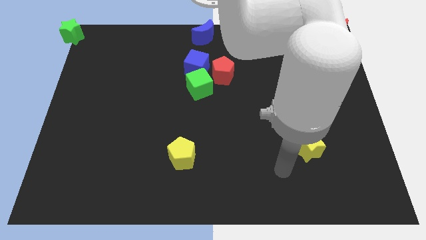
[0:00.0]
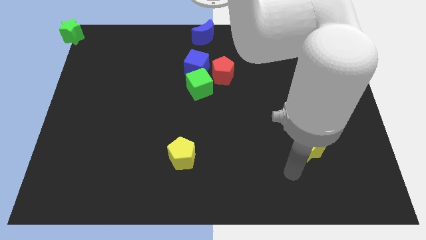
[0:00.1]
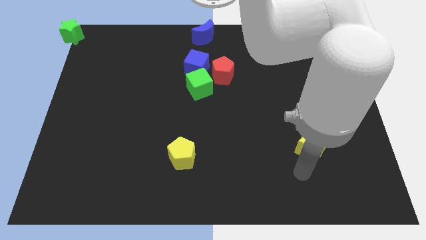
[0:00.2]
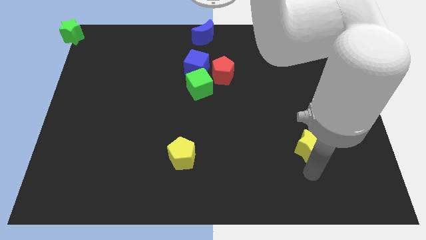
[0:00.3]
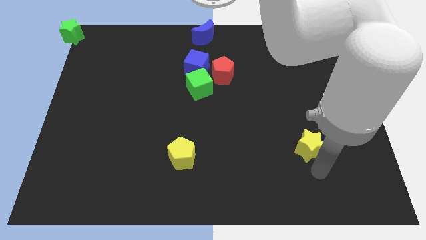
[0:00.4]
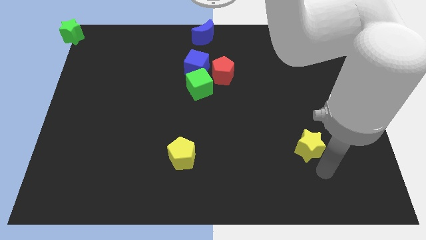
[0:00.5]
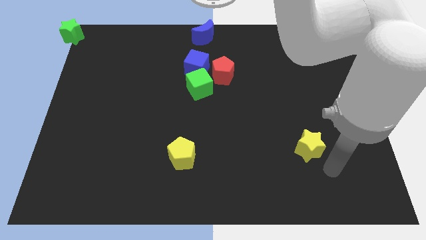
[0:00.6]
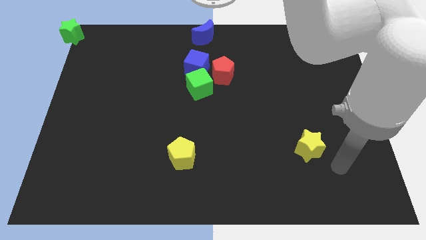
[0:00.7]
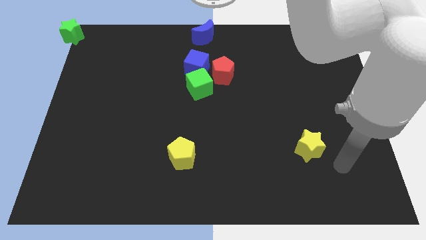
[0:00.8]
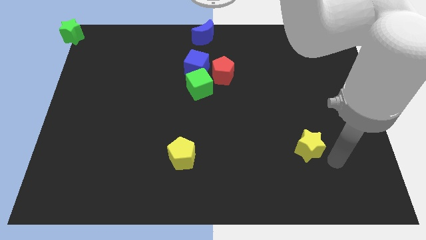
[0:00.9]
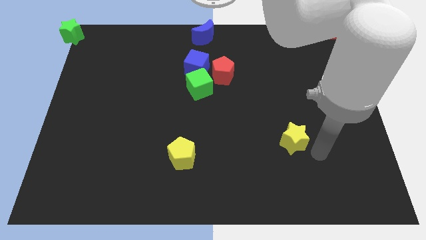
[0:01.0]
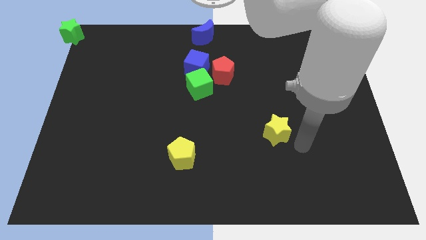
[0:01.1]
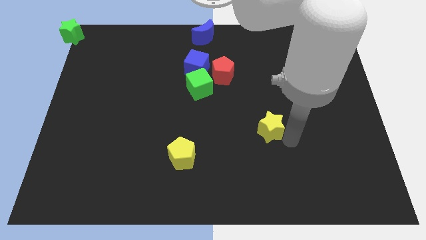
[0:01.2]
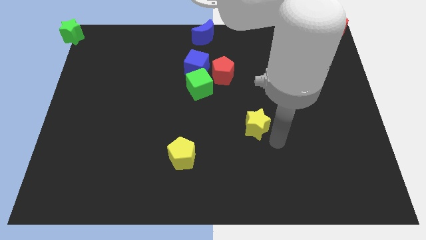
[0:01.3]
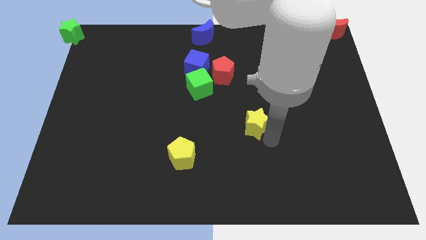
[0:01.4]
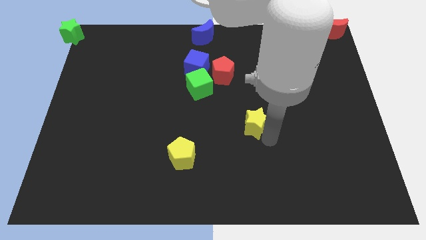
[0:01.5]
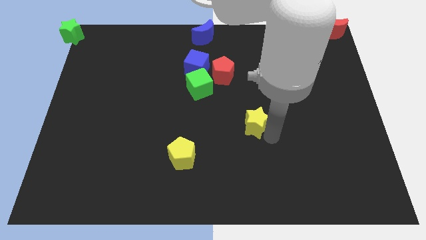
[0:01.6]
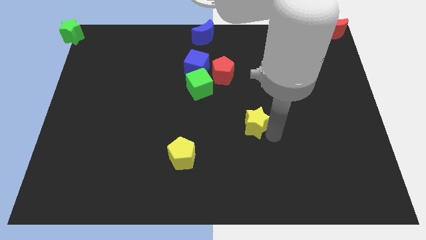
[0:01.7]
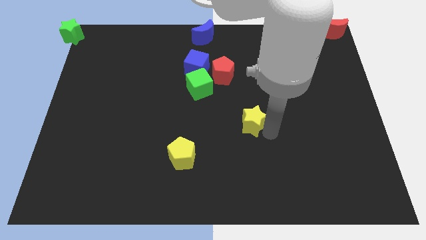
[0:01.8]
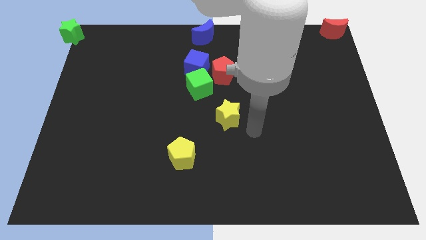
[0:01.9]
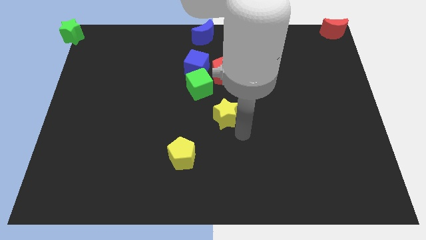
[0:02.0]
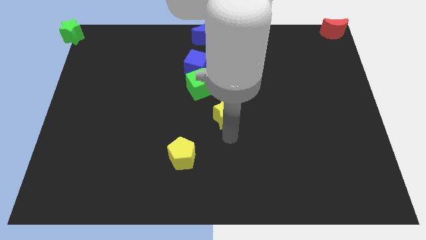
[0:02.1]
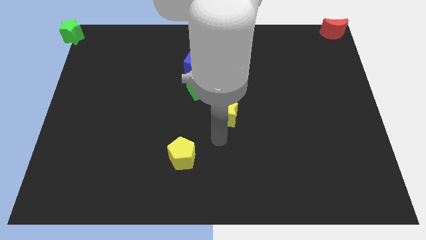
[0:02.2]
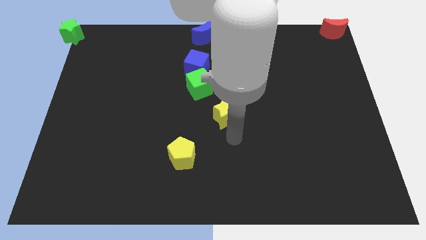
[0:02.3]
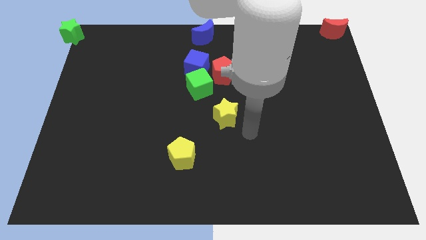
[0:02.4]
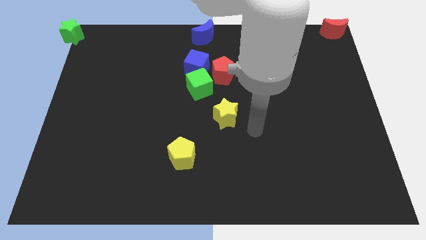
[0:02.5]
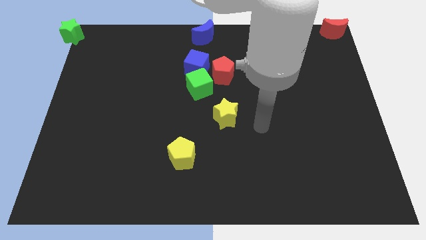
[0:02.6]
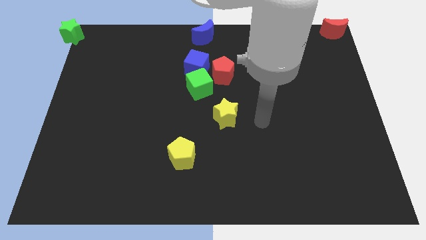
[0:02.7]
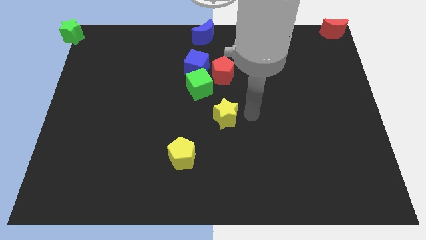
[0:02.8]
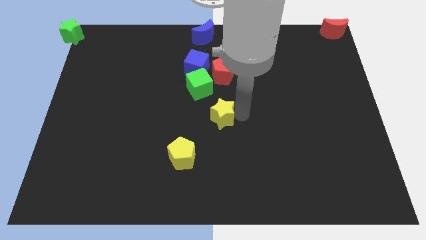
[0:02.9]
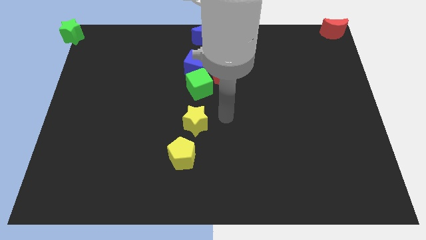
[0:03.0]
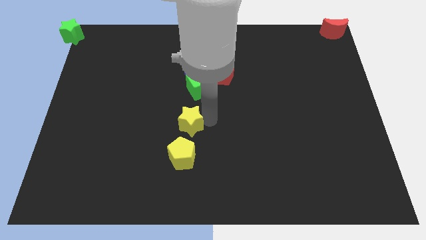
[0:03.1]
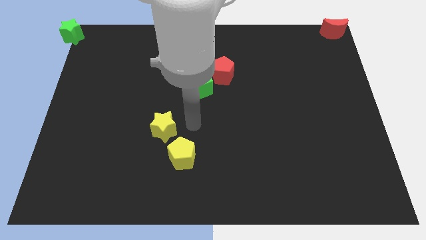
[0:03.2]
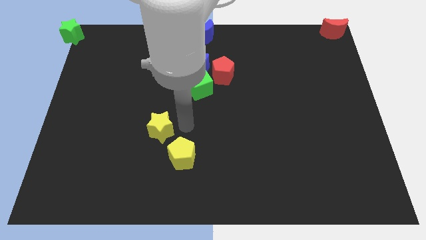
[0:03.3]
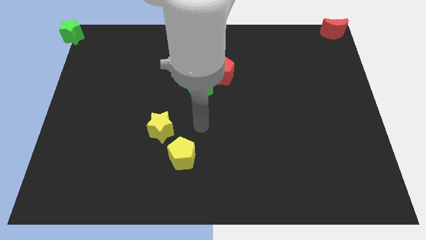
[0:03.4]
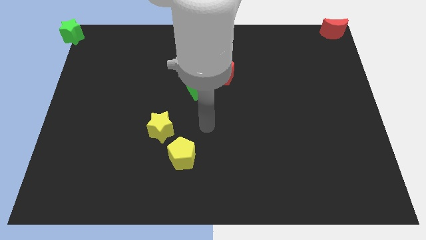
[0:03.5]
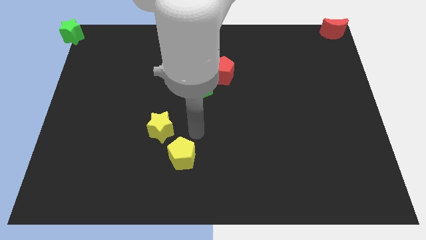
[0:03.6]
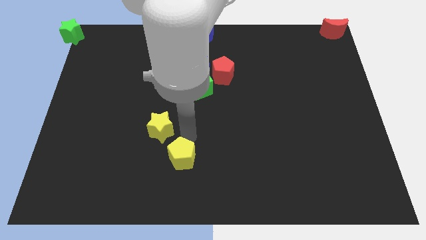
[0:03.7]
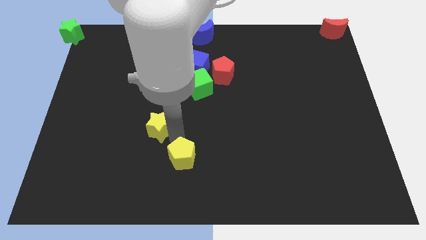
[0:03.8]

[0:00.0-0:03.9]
place the yellow star diagonally left to the yellow pentagon

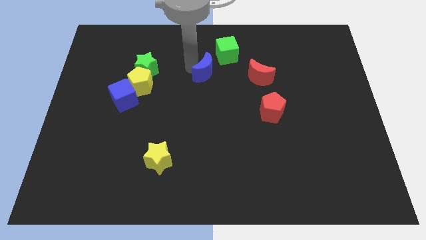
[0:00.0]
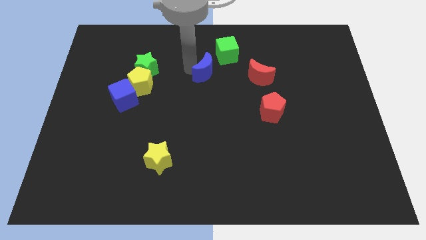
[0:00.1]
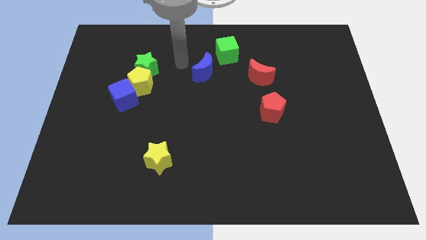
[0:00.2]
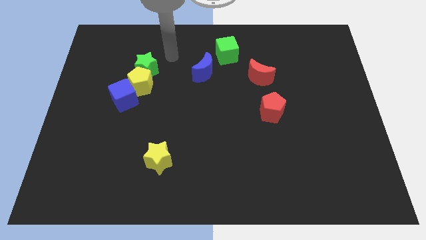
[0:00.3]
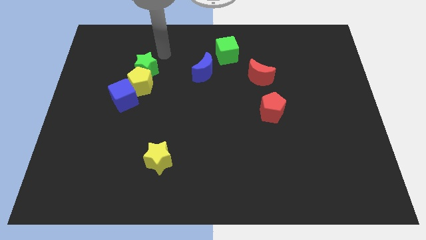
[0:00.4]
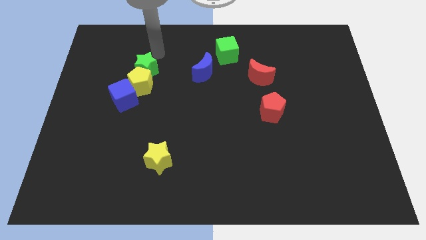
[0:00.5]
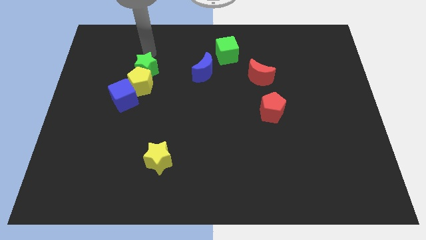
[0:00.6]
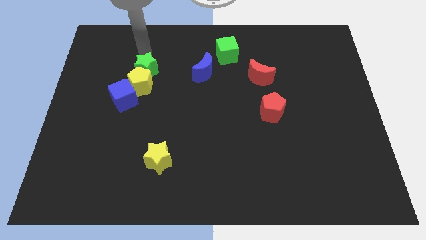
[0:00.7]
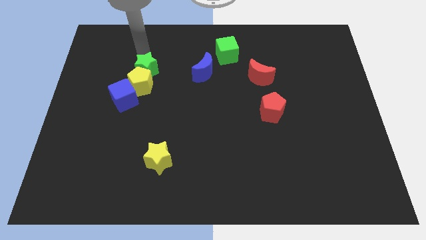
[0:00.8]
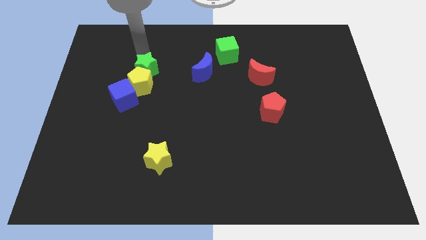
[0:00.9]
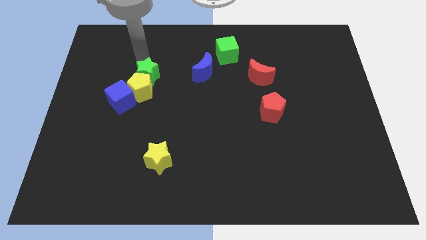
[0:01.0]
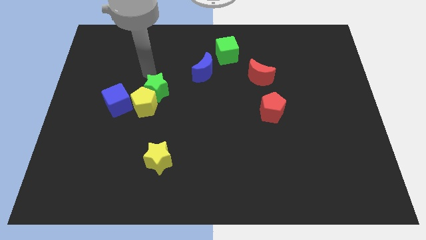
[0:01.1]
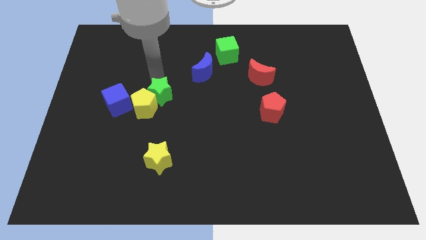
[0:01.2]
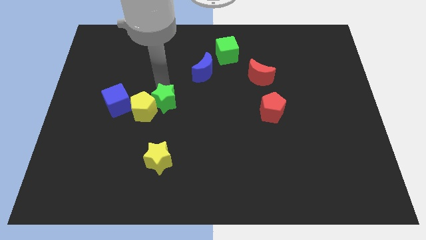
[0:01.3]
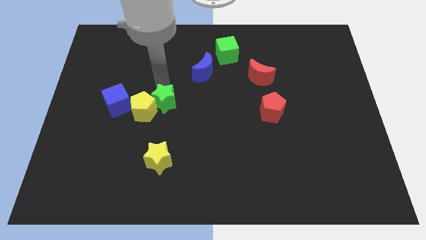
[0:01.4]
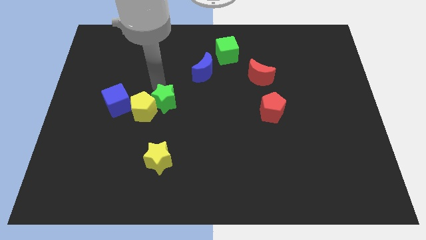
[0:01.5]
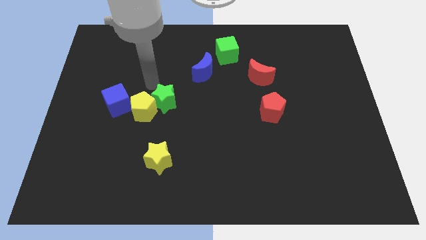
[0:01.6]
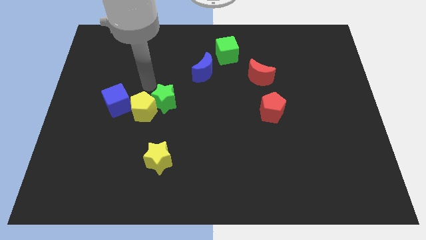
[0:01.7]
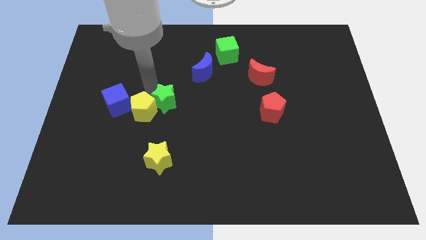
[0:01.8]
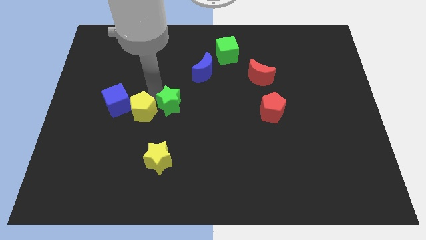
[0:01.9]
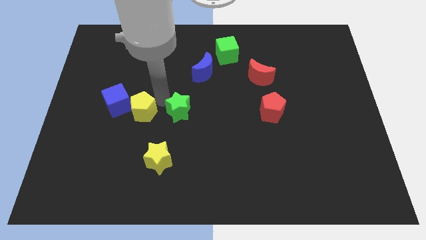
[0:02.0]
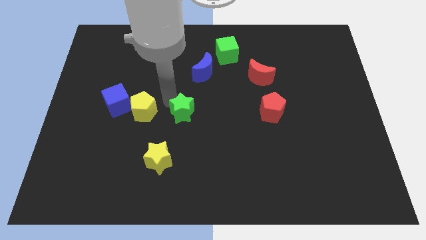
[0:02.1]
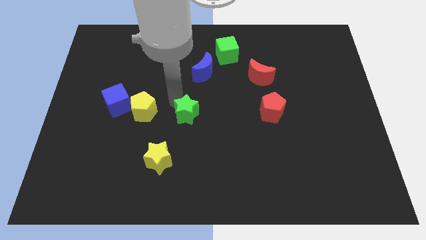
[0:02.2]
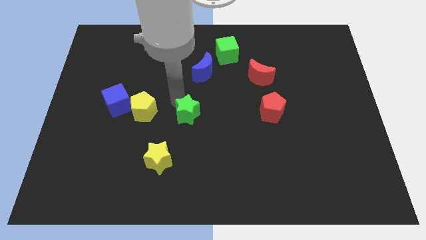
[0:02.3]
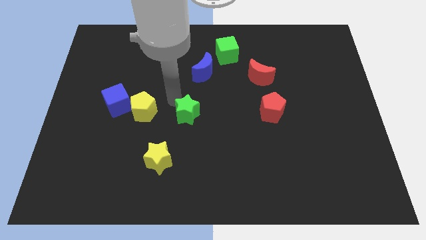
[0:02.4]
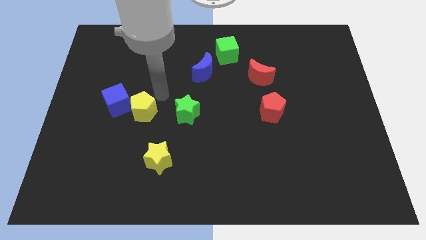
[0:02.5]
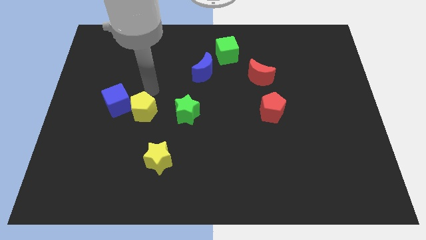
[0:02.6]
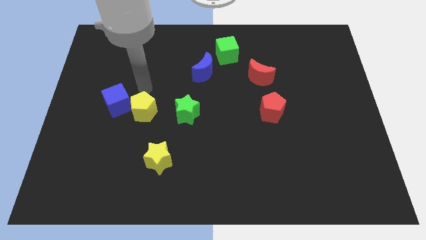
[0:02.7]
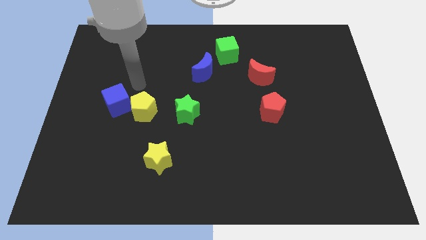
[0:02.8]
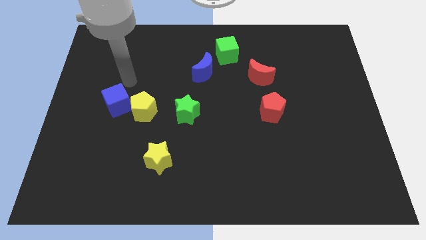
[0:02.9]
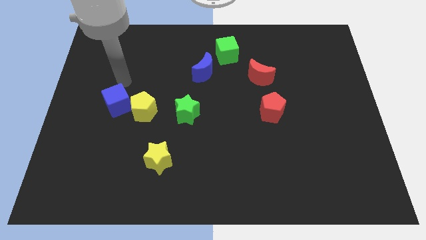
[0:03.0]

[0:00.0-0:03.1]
place green star to the right of yellow pentagon

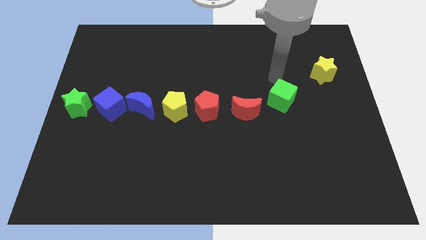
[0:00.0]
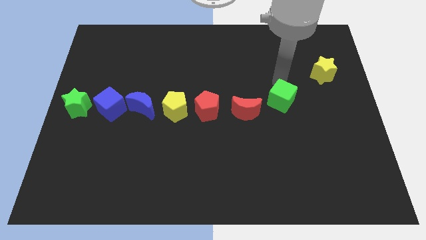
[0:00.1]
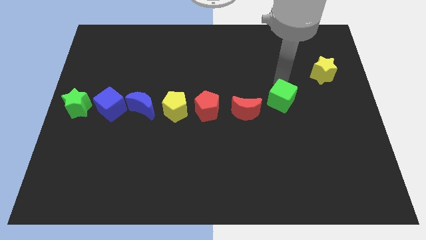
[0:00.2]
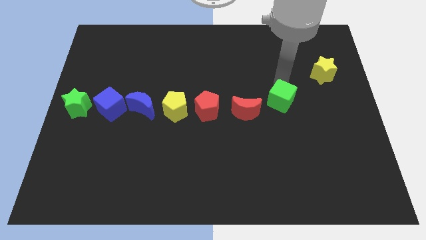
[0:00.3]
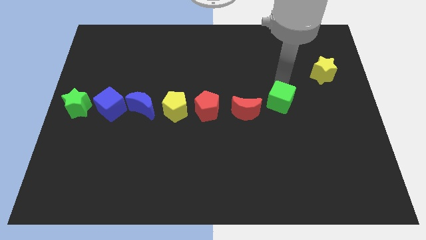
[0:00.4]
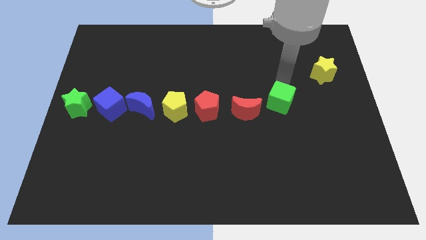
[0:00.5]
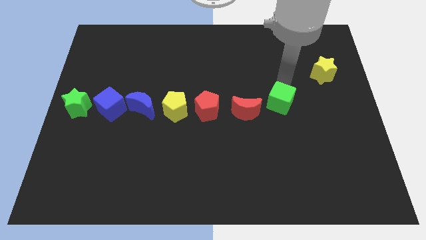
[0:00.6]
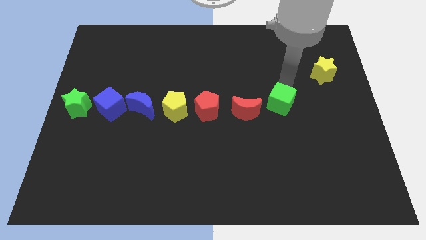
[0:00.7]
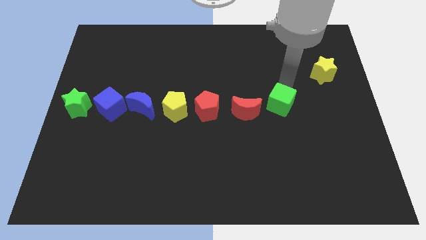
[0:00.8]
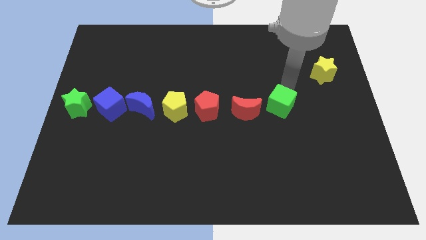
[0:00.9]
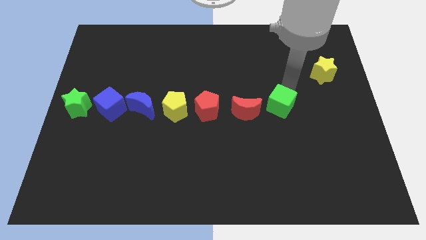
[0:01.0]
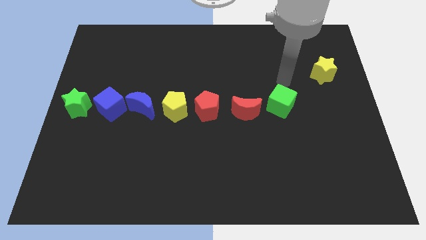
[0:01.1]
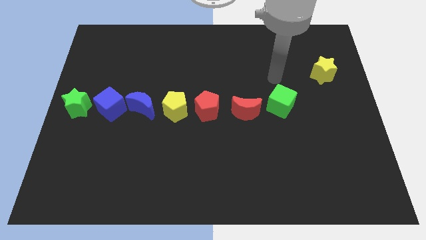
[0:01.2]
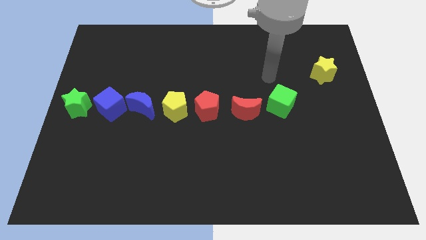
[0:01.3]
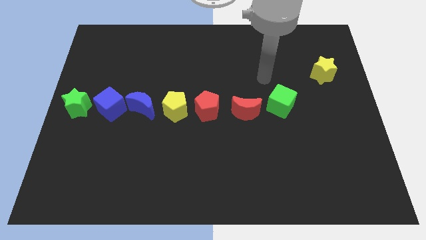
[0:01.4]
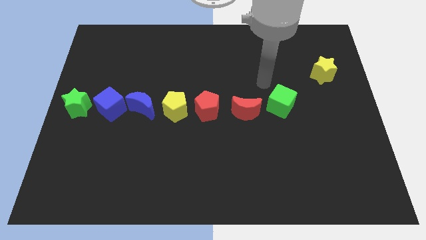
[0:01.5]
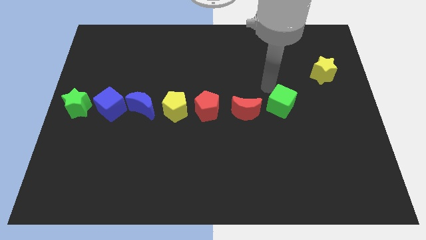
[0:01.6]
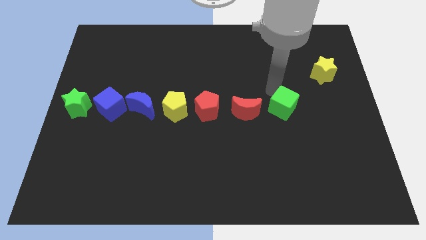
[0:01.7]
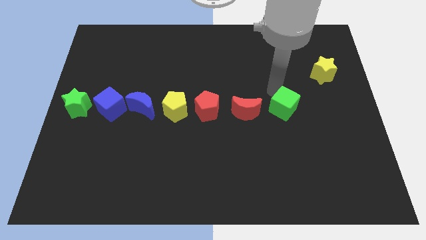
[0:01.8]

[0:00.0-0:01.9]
adjust the green cube to the right side of the red crescent

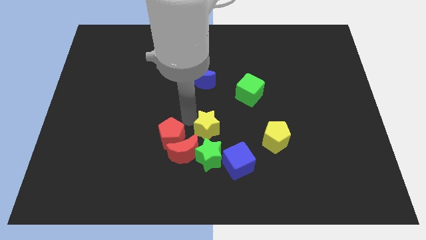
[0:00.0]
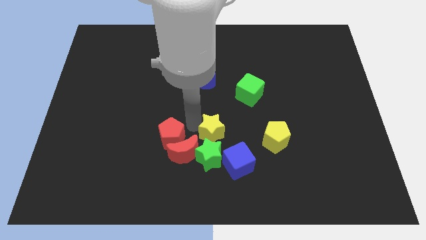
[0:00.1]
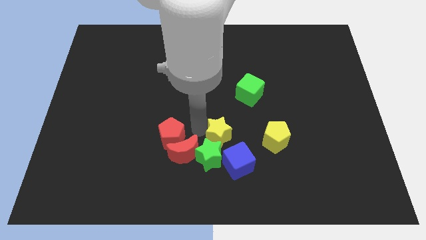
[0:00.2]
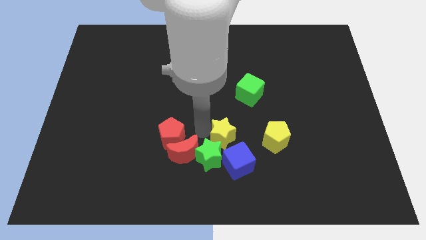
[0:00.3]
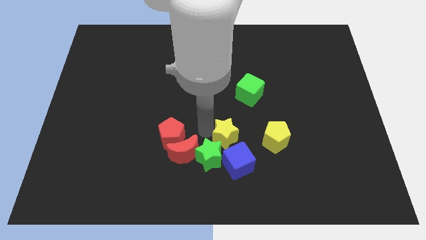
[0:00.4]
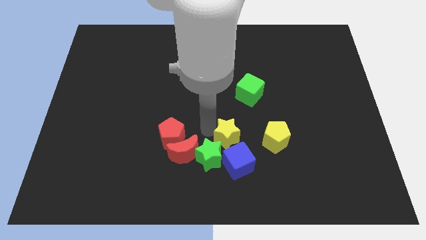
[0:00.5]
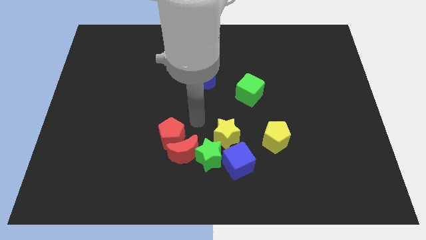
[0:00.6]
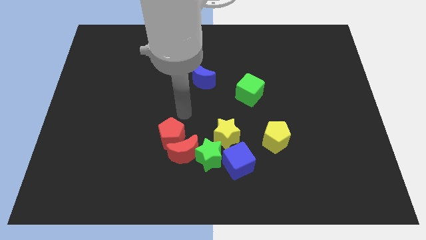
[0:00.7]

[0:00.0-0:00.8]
move the yellow star slightly downwards to the right to the green star
